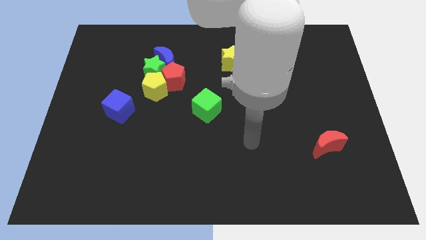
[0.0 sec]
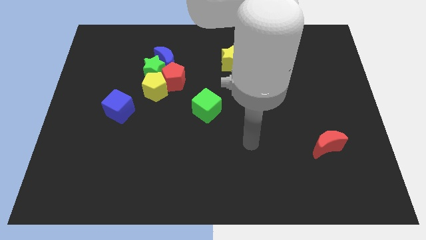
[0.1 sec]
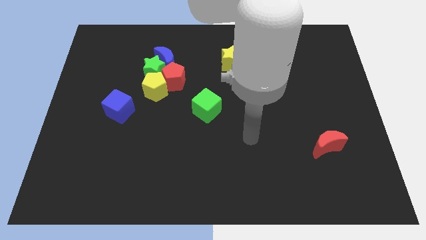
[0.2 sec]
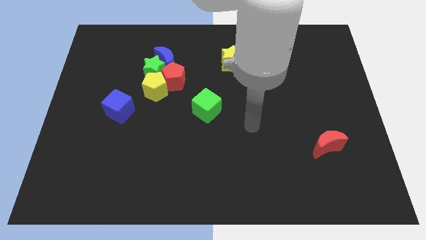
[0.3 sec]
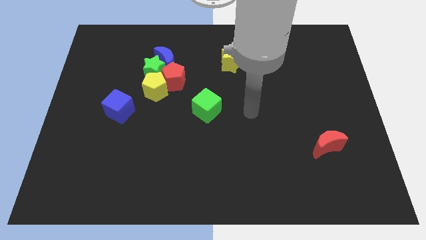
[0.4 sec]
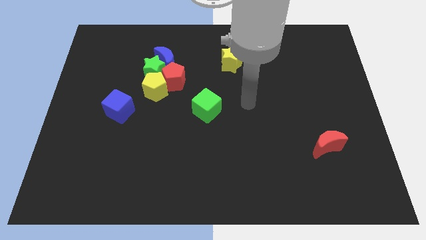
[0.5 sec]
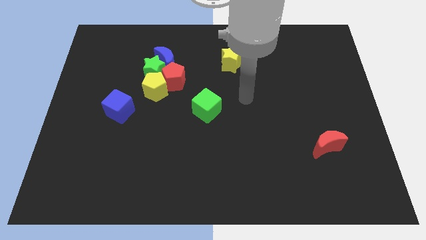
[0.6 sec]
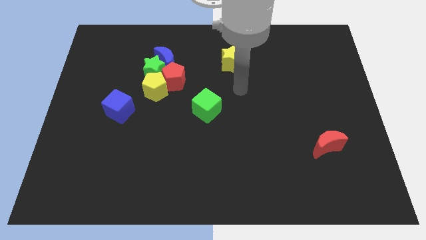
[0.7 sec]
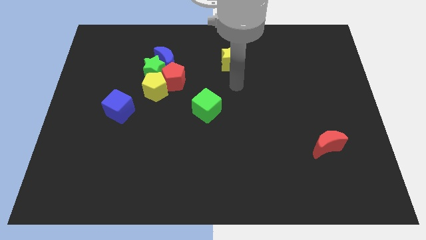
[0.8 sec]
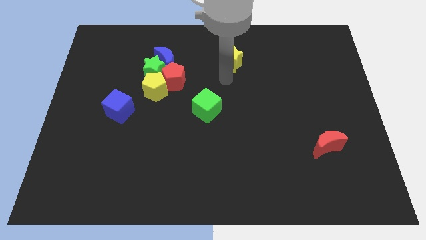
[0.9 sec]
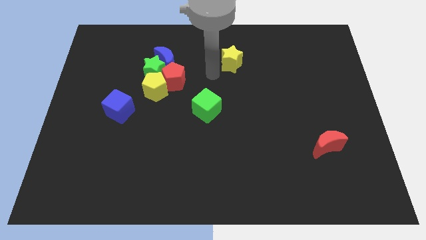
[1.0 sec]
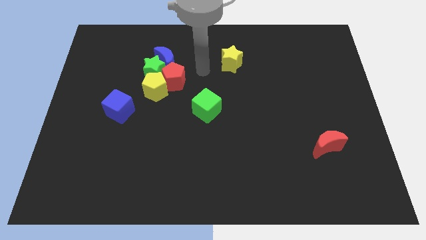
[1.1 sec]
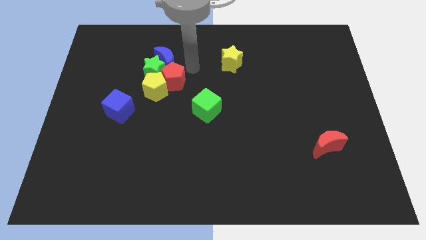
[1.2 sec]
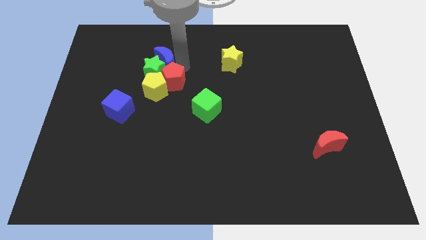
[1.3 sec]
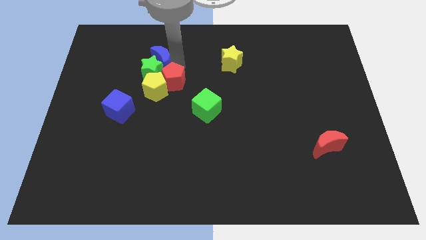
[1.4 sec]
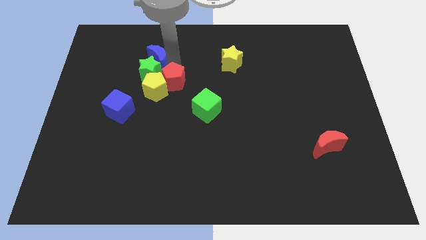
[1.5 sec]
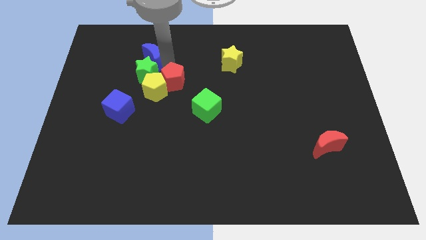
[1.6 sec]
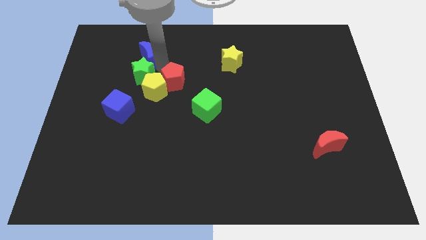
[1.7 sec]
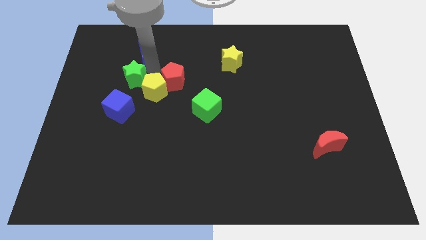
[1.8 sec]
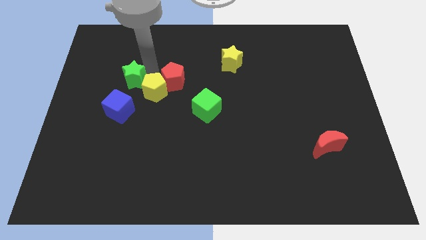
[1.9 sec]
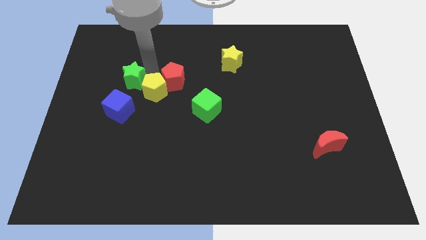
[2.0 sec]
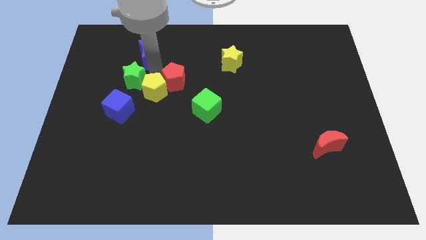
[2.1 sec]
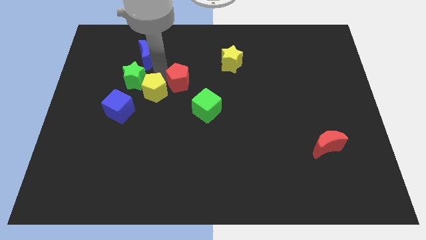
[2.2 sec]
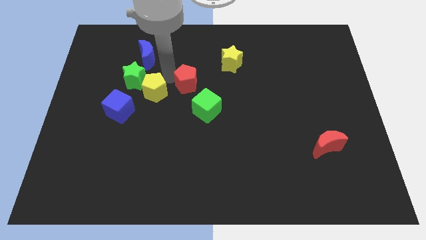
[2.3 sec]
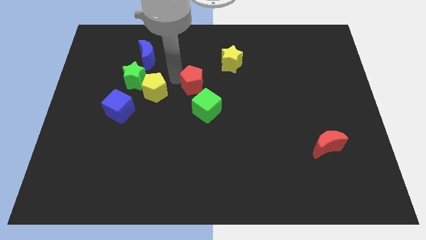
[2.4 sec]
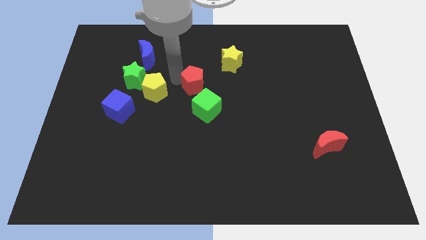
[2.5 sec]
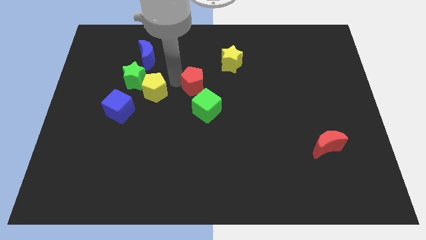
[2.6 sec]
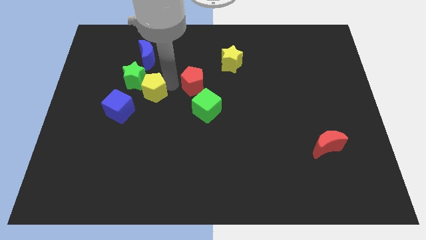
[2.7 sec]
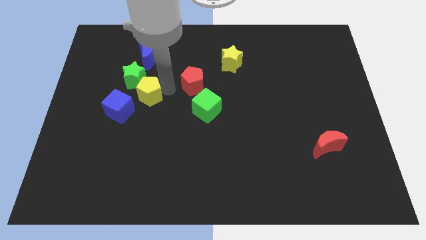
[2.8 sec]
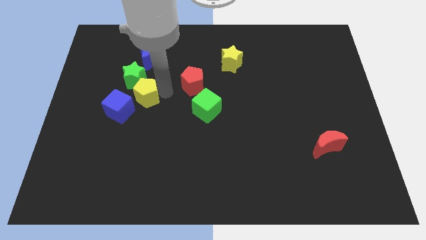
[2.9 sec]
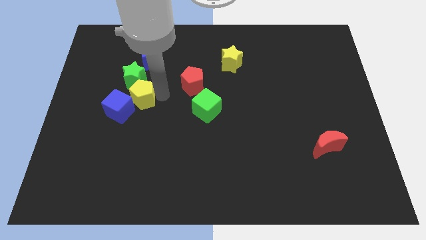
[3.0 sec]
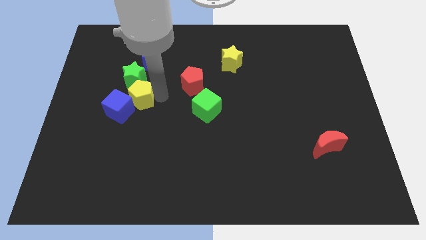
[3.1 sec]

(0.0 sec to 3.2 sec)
separate group of blocks from each other

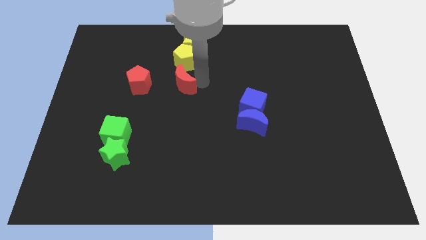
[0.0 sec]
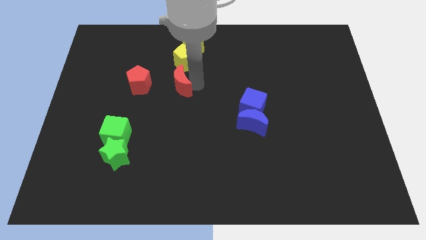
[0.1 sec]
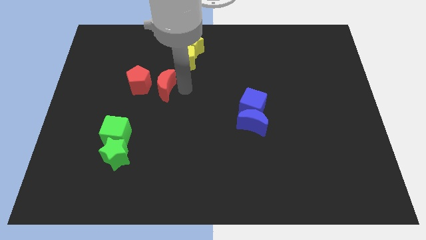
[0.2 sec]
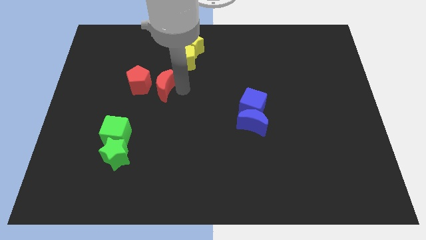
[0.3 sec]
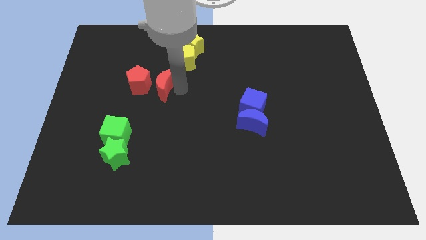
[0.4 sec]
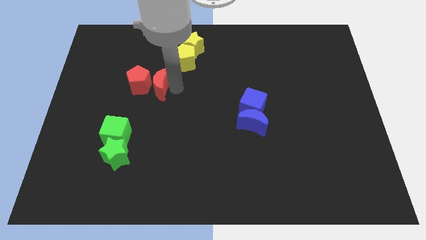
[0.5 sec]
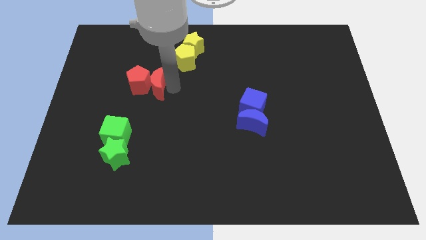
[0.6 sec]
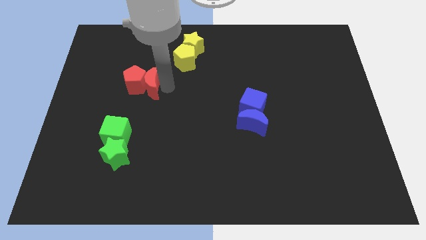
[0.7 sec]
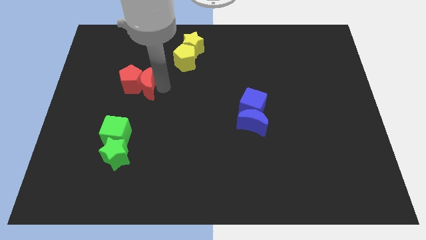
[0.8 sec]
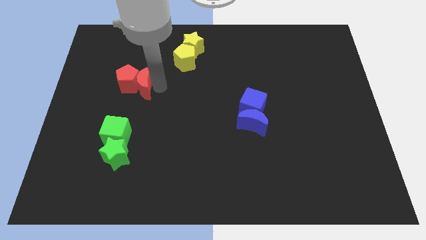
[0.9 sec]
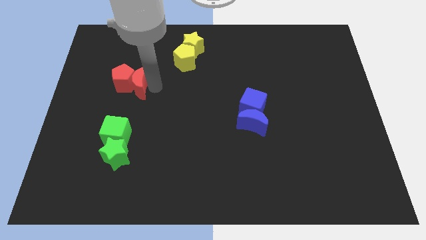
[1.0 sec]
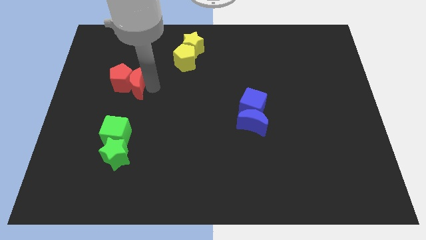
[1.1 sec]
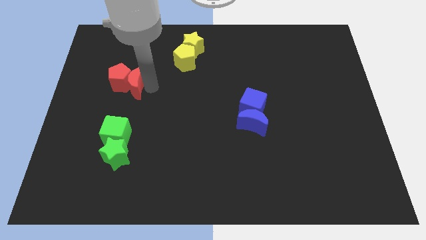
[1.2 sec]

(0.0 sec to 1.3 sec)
put the group of red blocks vertically at the top side of the green cube

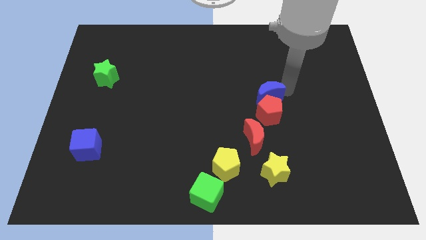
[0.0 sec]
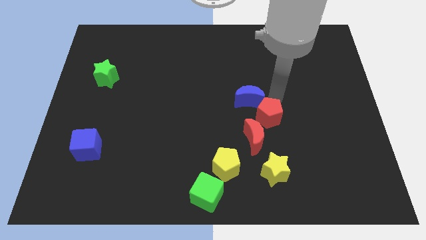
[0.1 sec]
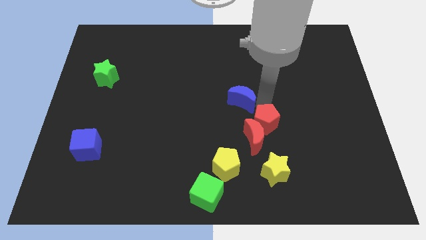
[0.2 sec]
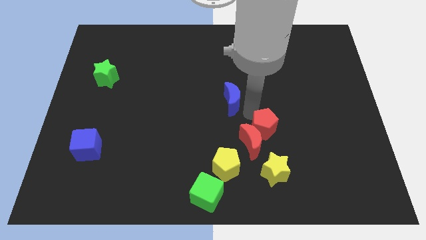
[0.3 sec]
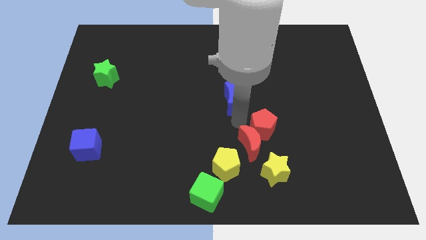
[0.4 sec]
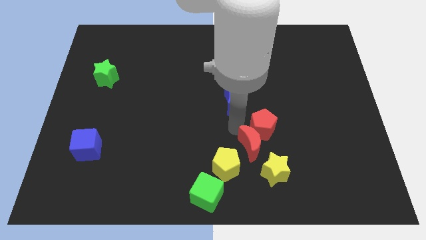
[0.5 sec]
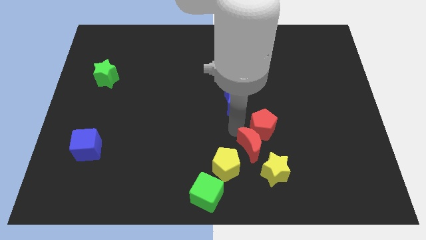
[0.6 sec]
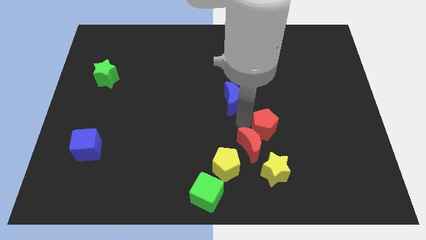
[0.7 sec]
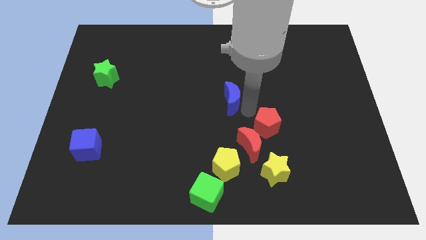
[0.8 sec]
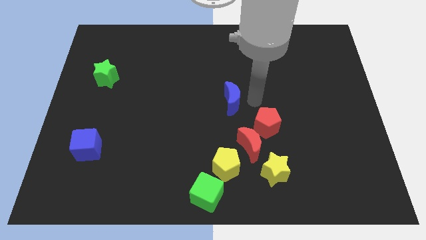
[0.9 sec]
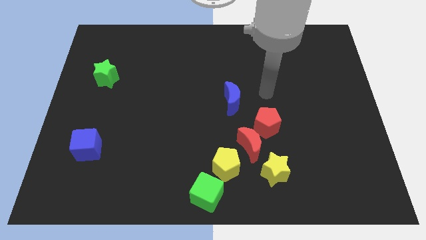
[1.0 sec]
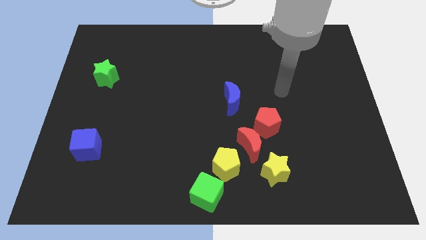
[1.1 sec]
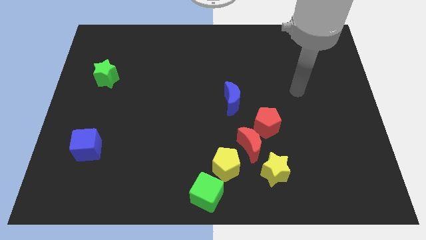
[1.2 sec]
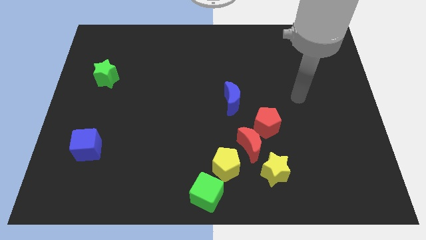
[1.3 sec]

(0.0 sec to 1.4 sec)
separate the blue moon and red pentagon to each other

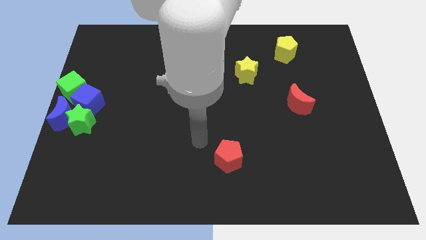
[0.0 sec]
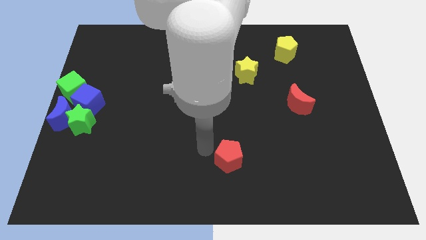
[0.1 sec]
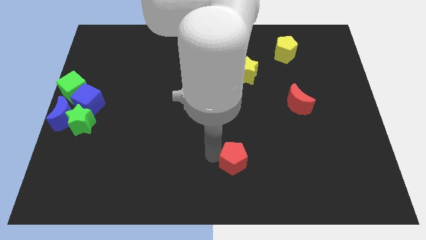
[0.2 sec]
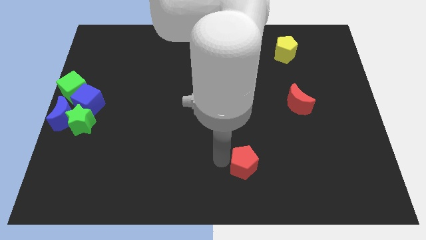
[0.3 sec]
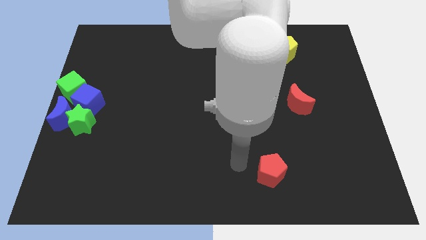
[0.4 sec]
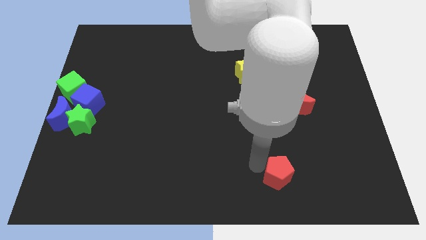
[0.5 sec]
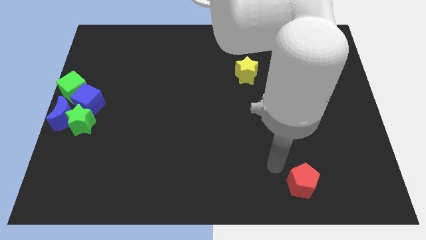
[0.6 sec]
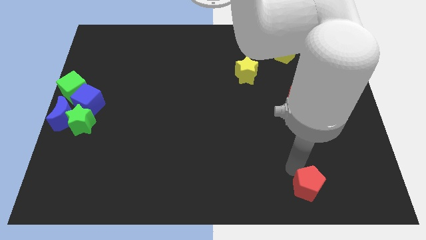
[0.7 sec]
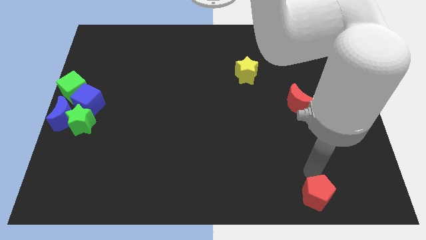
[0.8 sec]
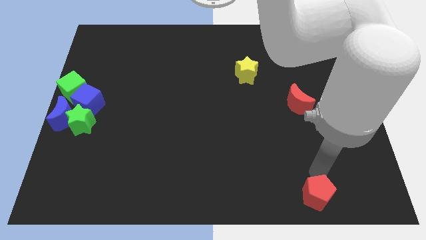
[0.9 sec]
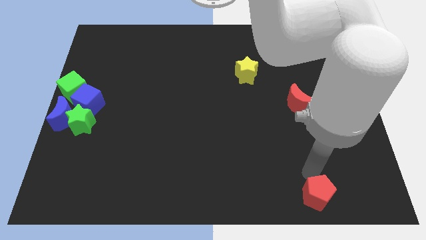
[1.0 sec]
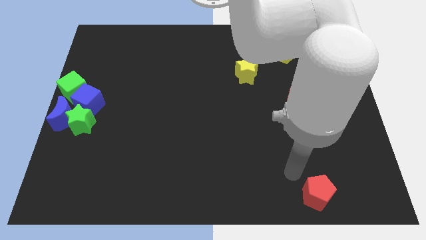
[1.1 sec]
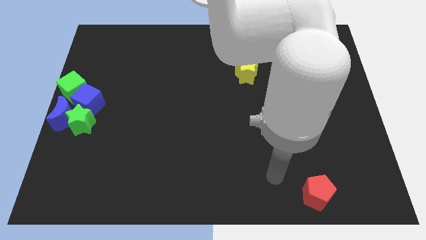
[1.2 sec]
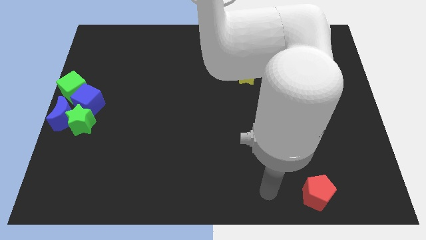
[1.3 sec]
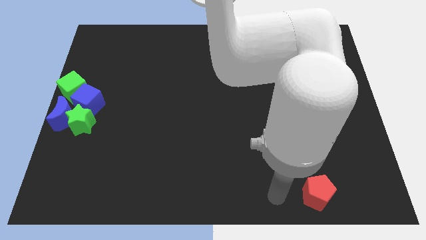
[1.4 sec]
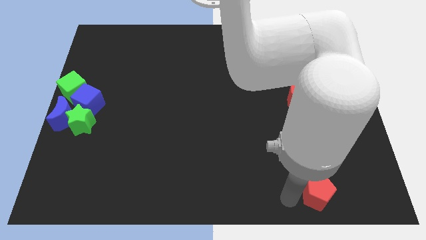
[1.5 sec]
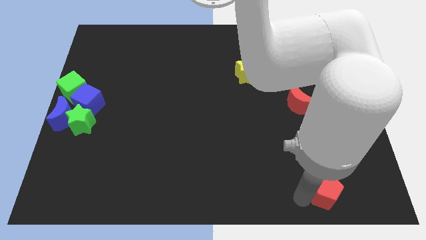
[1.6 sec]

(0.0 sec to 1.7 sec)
put the red pentagon vertically below the red moon

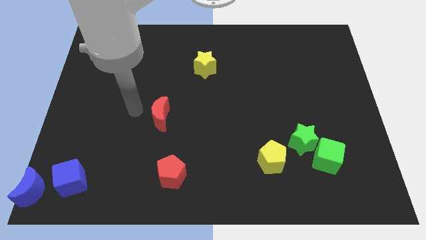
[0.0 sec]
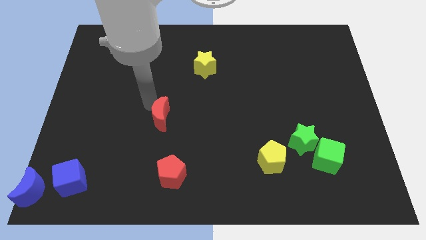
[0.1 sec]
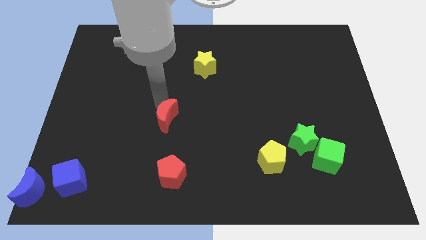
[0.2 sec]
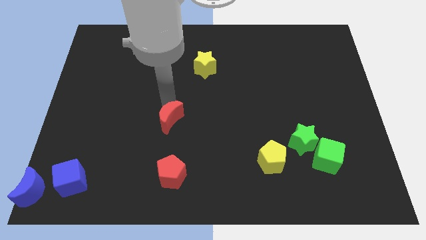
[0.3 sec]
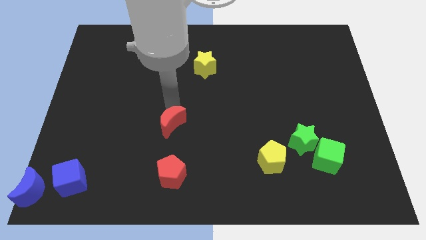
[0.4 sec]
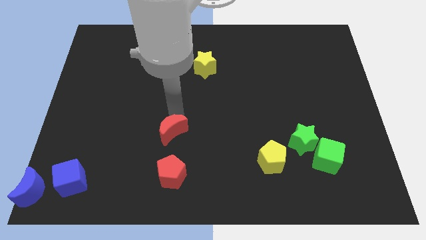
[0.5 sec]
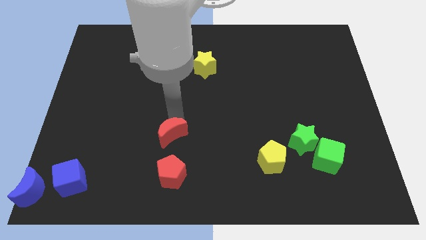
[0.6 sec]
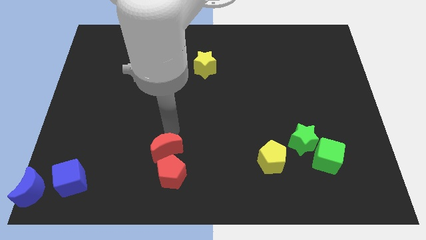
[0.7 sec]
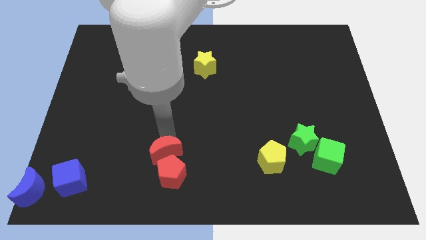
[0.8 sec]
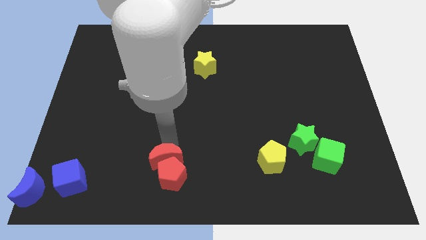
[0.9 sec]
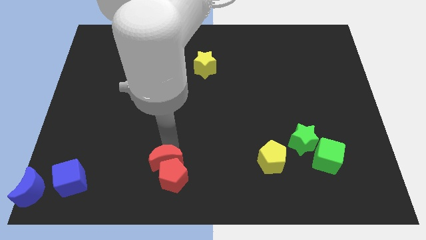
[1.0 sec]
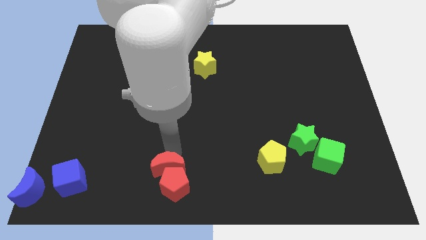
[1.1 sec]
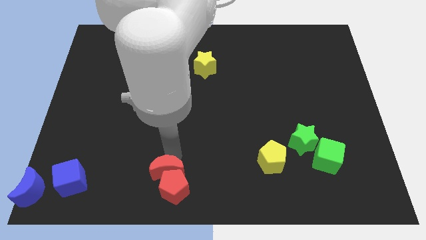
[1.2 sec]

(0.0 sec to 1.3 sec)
push the red crescent into the red pentagon
